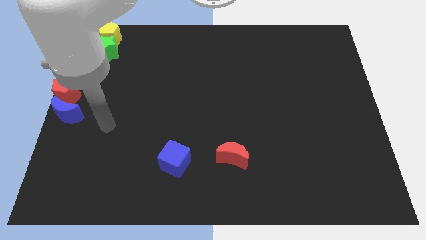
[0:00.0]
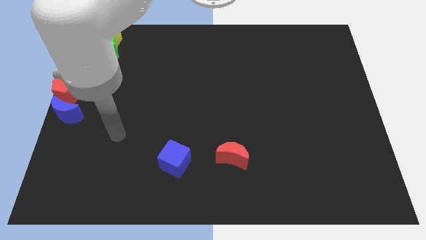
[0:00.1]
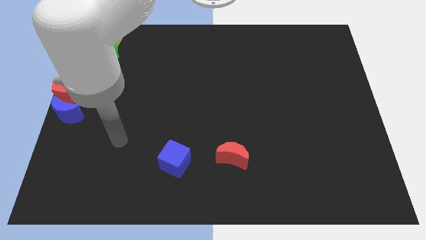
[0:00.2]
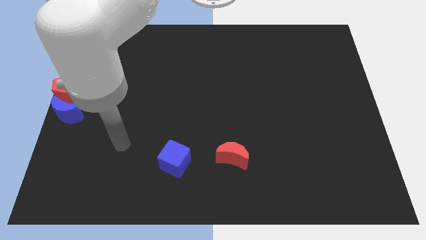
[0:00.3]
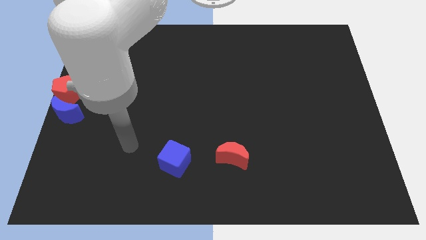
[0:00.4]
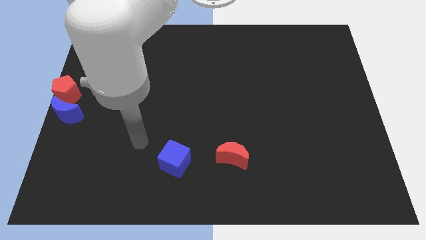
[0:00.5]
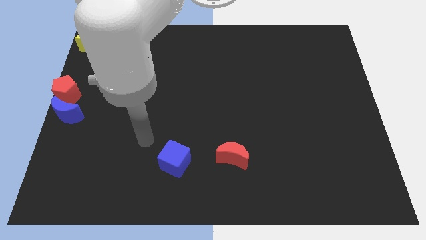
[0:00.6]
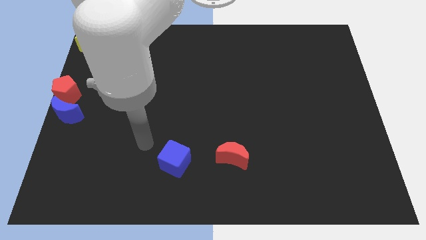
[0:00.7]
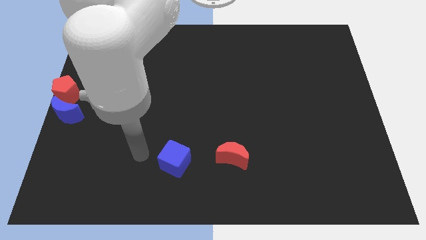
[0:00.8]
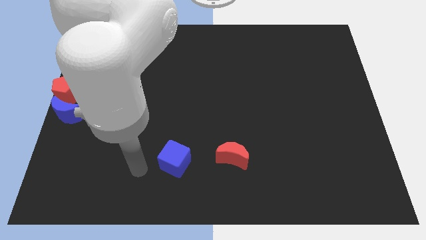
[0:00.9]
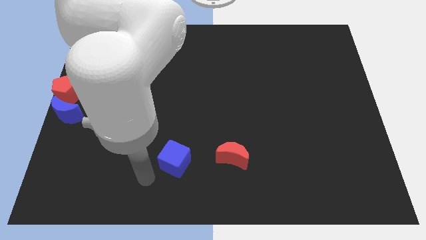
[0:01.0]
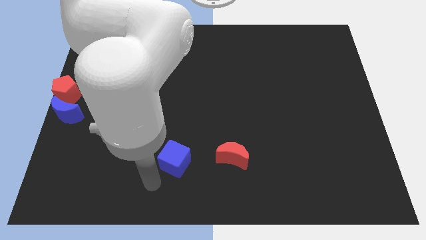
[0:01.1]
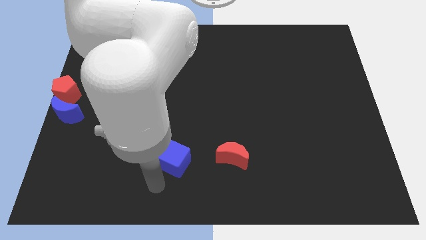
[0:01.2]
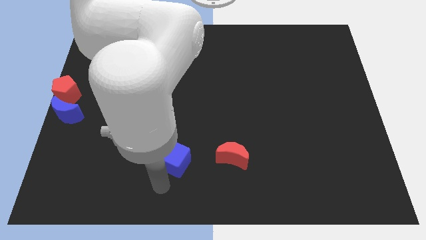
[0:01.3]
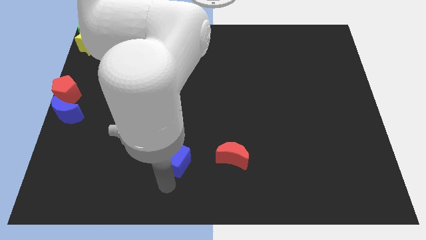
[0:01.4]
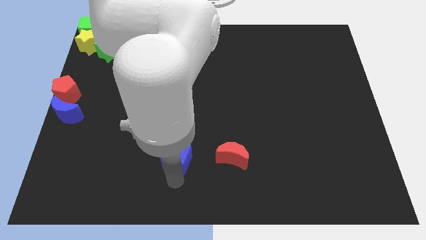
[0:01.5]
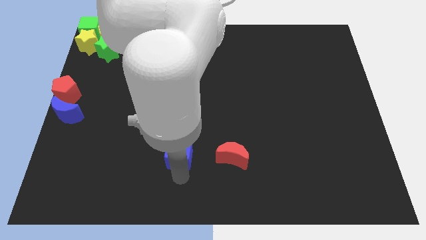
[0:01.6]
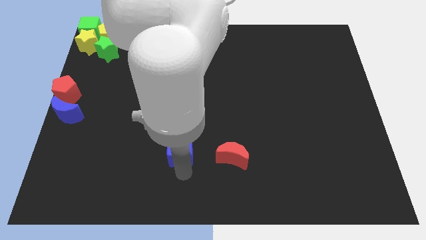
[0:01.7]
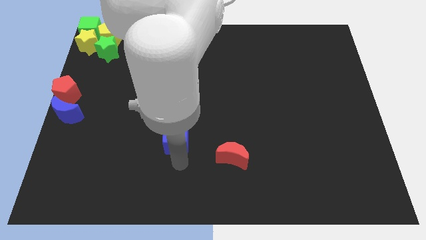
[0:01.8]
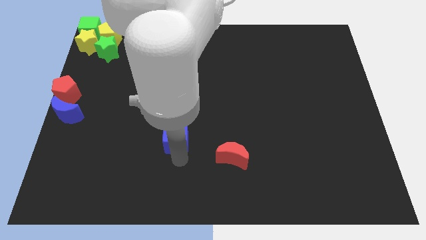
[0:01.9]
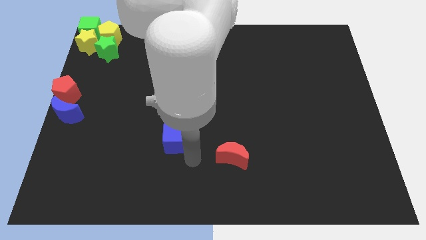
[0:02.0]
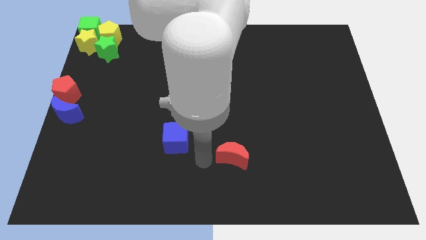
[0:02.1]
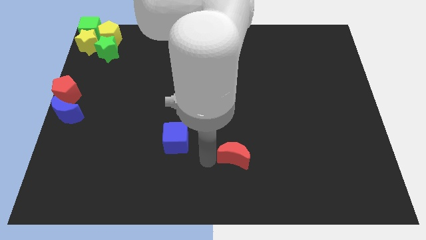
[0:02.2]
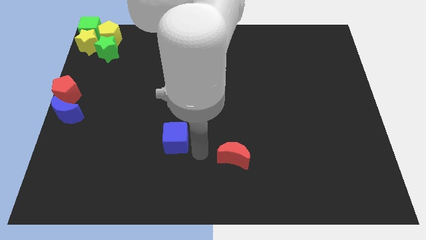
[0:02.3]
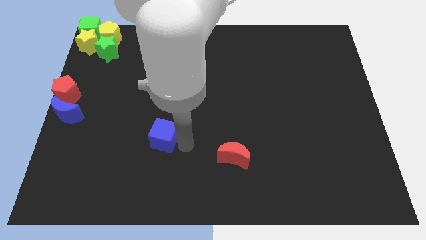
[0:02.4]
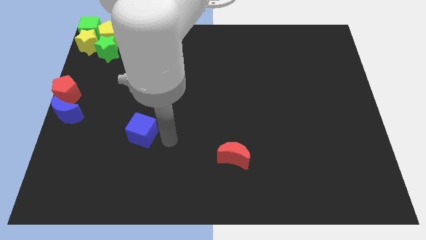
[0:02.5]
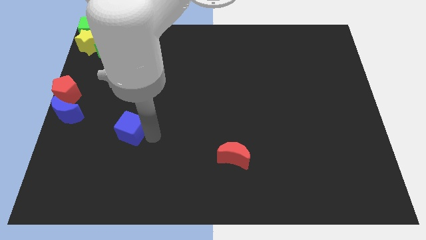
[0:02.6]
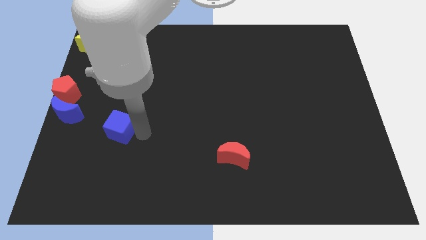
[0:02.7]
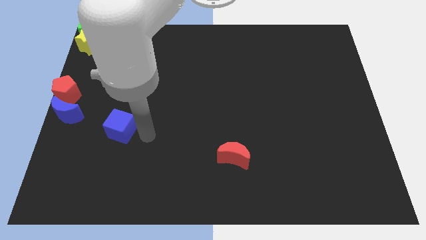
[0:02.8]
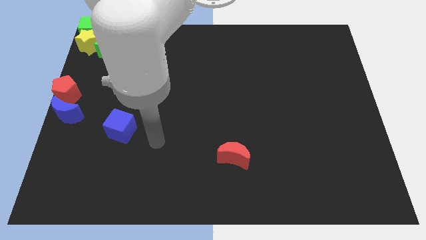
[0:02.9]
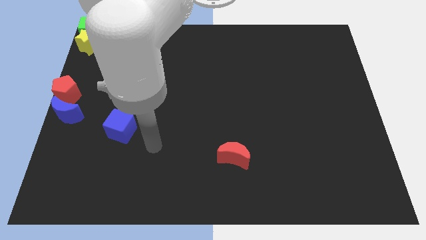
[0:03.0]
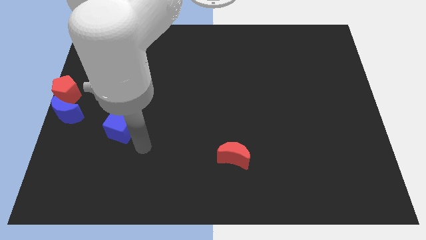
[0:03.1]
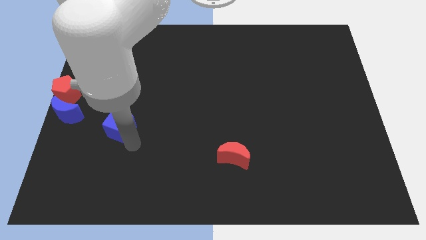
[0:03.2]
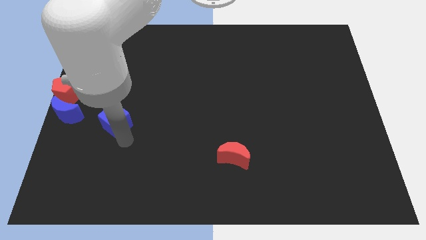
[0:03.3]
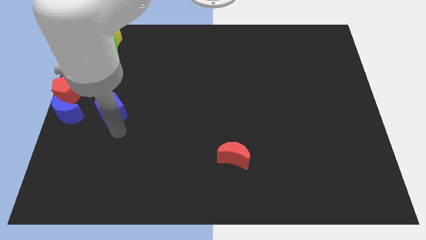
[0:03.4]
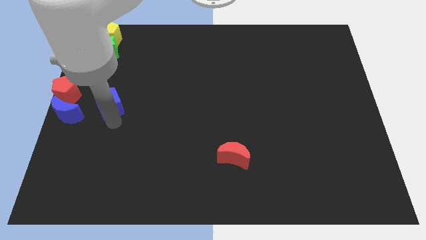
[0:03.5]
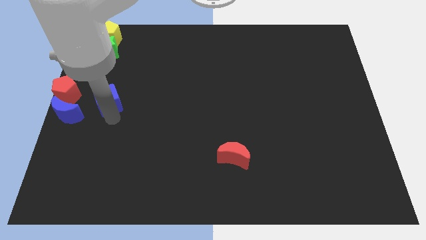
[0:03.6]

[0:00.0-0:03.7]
slide the blue cube towards the center left

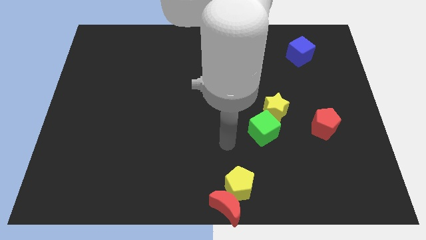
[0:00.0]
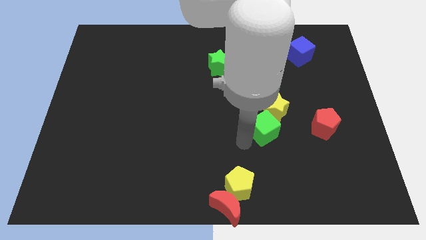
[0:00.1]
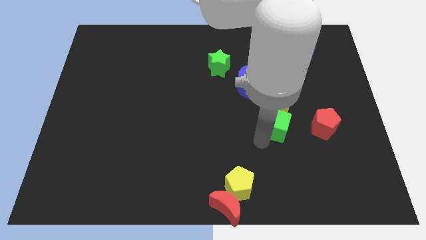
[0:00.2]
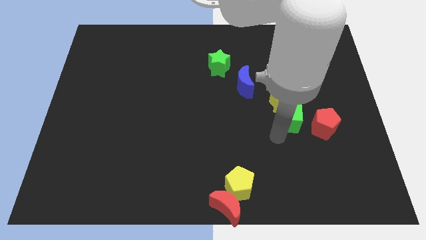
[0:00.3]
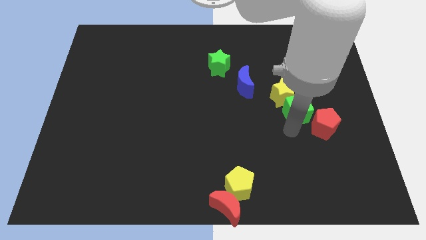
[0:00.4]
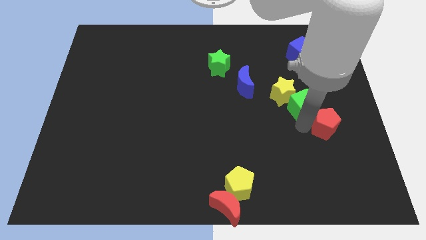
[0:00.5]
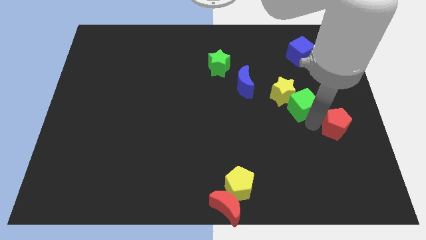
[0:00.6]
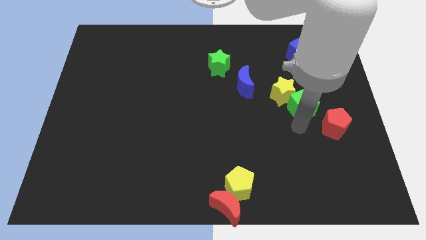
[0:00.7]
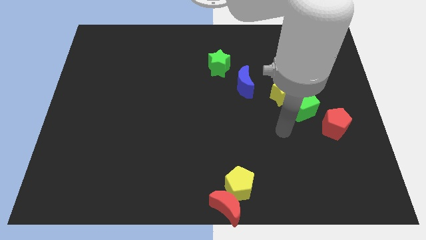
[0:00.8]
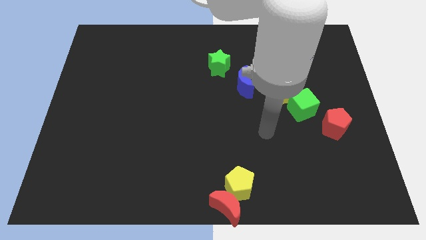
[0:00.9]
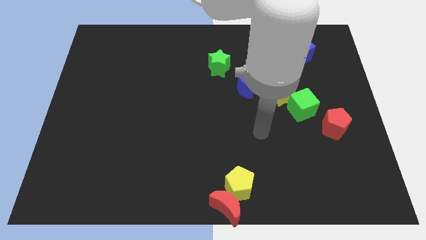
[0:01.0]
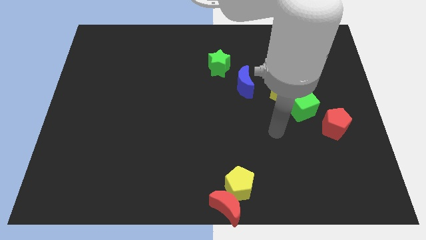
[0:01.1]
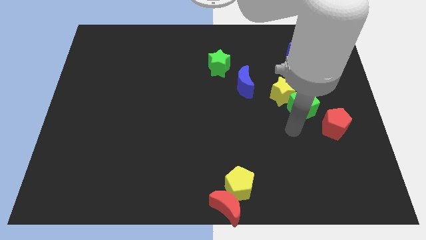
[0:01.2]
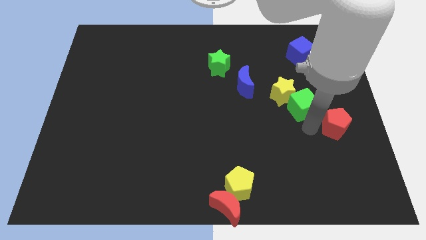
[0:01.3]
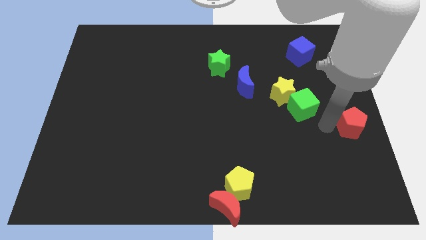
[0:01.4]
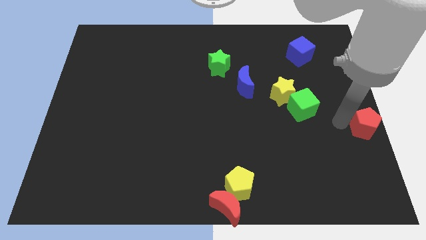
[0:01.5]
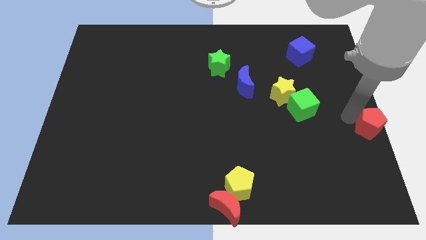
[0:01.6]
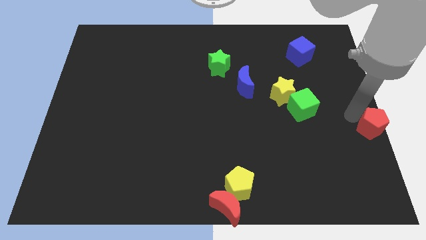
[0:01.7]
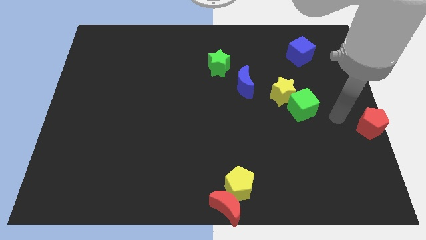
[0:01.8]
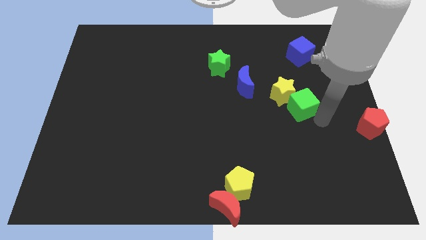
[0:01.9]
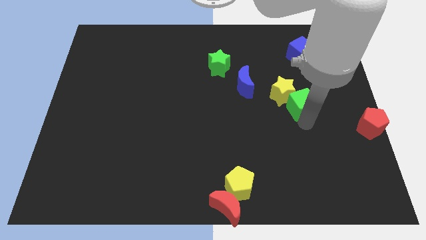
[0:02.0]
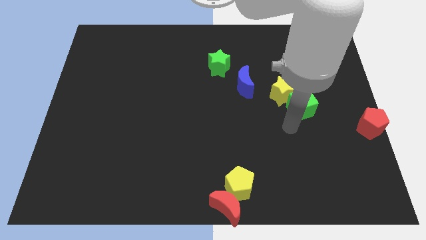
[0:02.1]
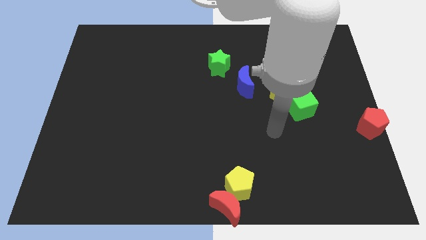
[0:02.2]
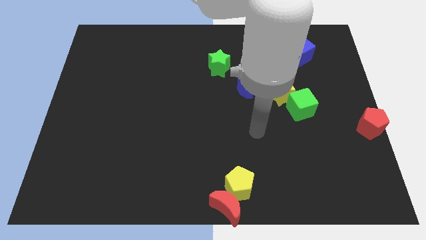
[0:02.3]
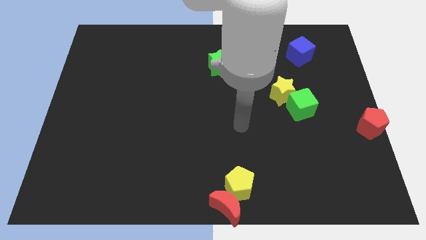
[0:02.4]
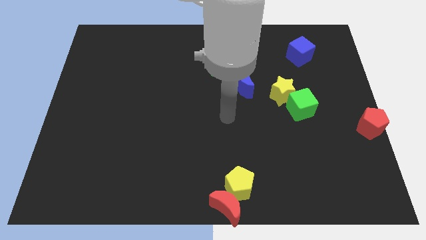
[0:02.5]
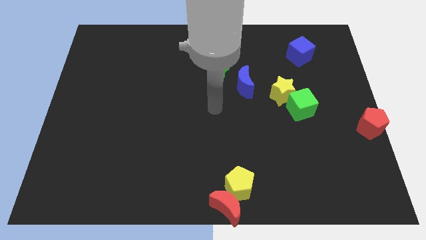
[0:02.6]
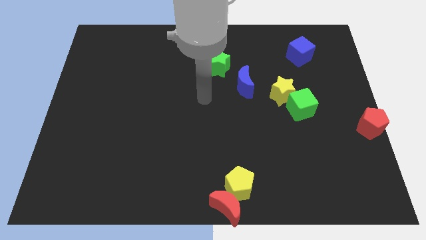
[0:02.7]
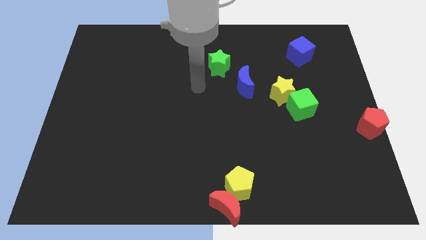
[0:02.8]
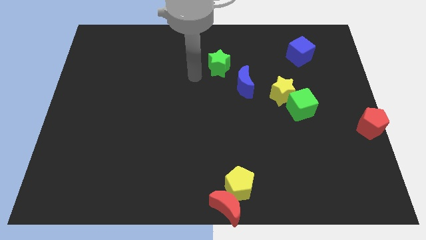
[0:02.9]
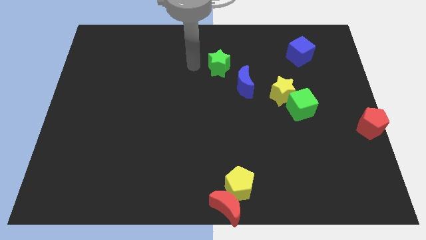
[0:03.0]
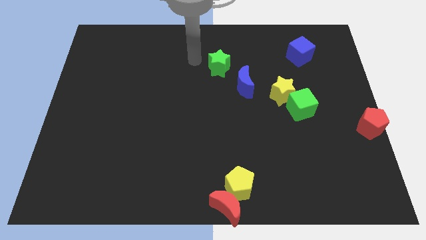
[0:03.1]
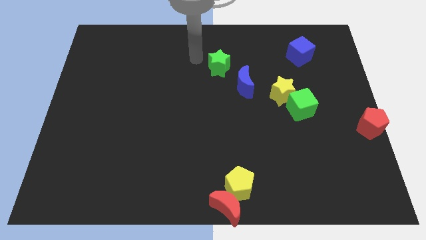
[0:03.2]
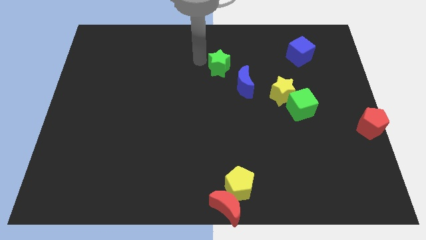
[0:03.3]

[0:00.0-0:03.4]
place the red pentagon at the center right of the board

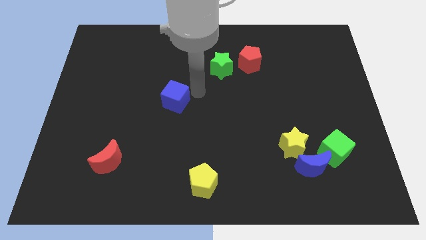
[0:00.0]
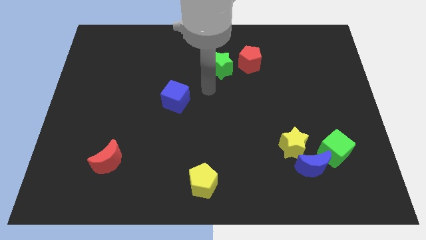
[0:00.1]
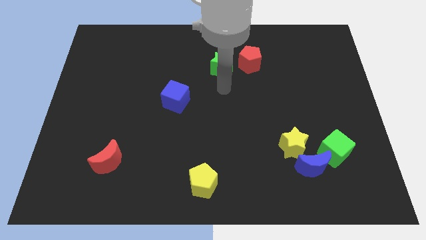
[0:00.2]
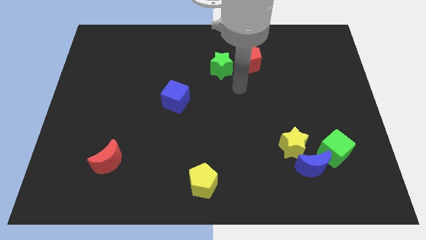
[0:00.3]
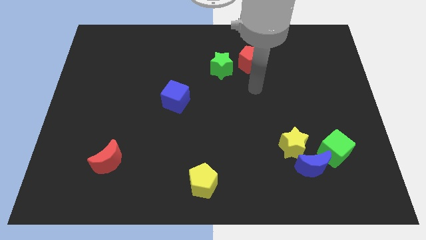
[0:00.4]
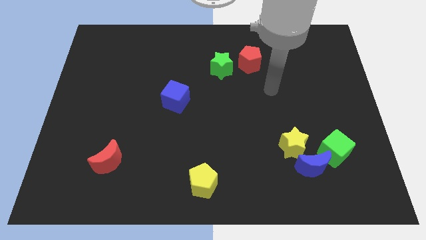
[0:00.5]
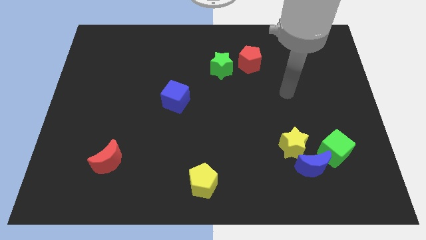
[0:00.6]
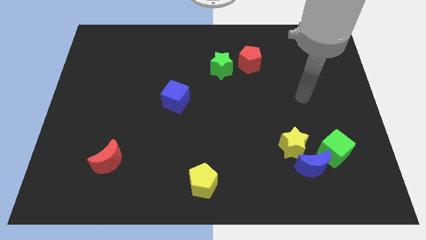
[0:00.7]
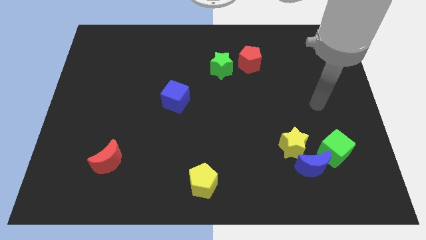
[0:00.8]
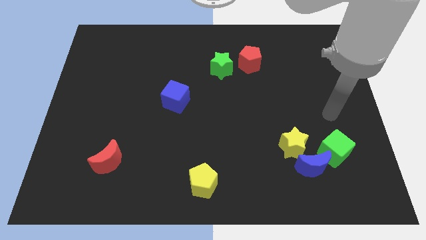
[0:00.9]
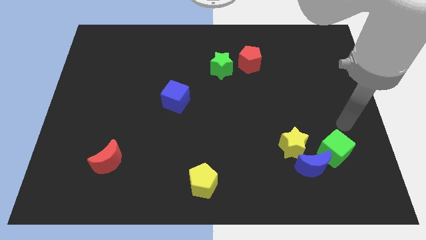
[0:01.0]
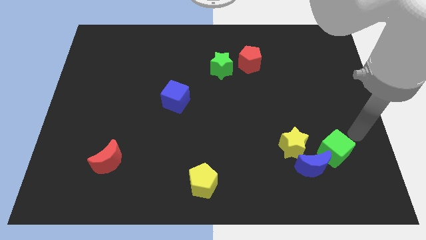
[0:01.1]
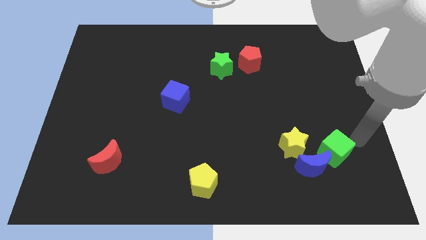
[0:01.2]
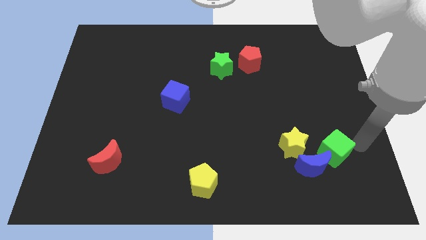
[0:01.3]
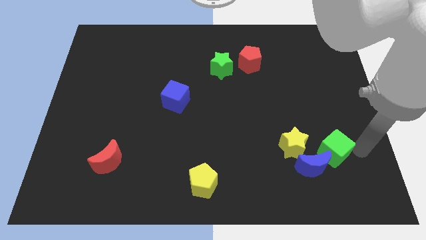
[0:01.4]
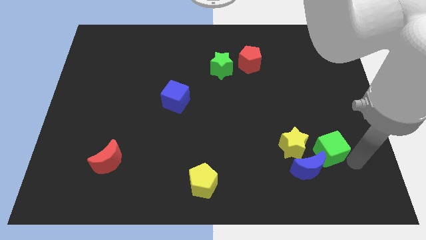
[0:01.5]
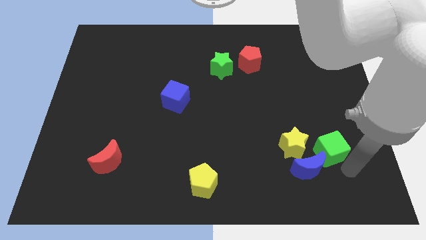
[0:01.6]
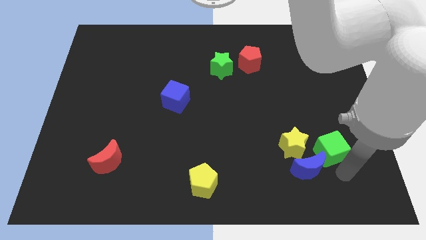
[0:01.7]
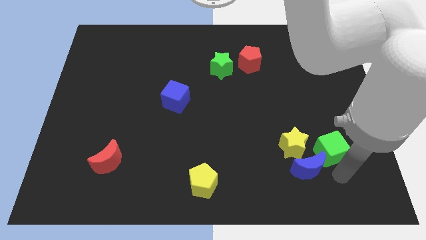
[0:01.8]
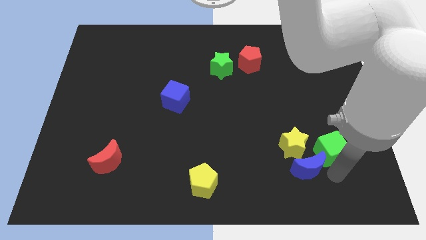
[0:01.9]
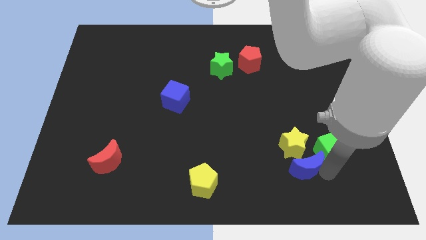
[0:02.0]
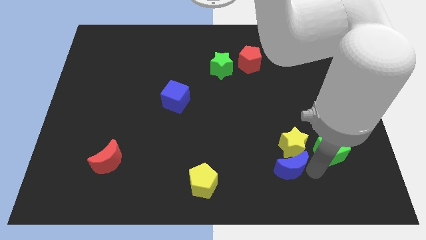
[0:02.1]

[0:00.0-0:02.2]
move your arm right to the blue crescent
